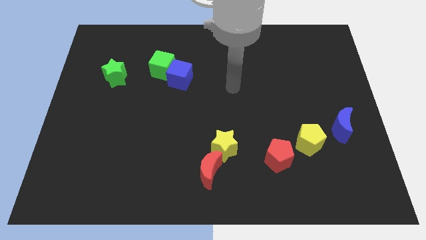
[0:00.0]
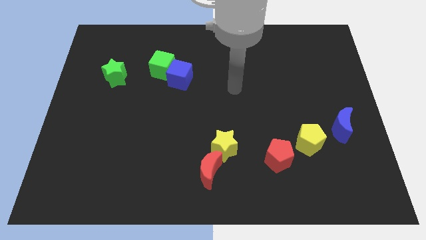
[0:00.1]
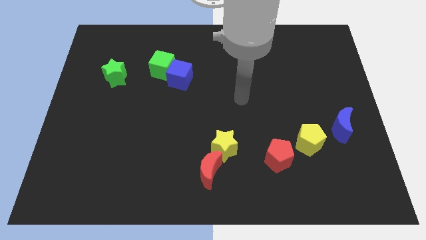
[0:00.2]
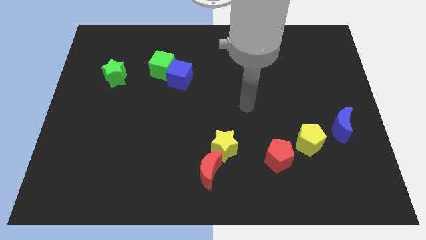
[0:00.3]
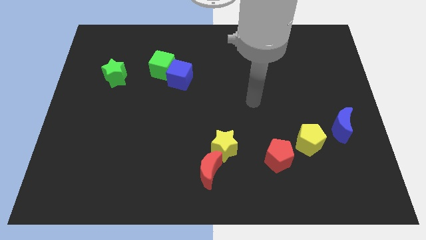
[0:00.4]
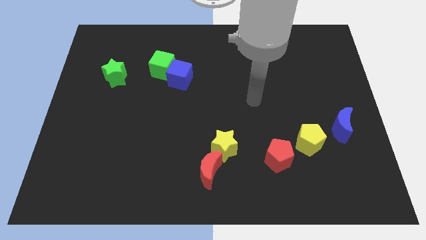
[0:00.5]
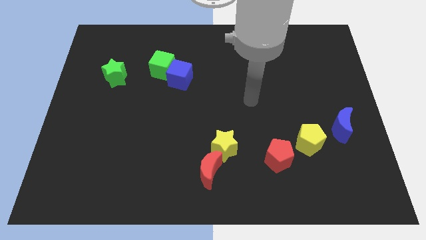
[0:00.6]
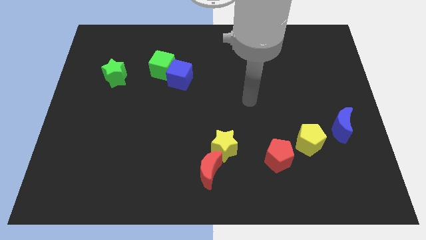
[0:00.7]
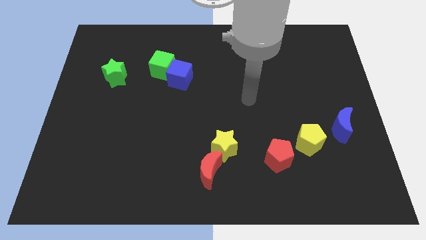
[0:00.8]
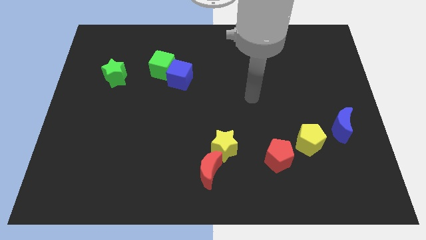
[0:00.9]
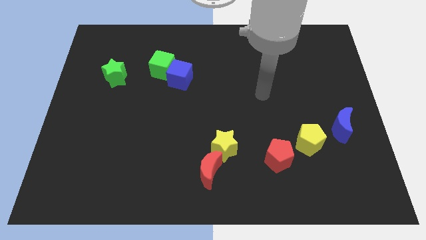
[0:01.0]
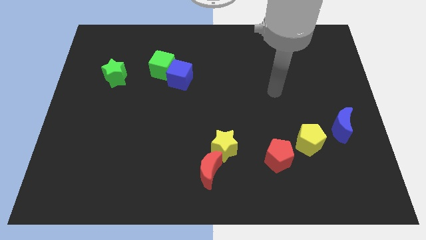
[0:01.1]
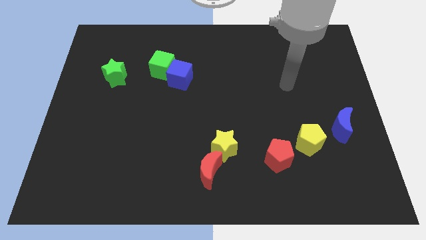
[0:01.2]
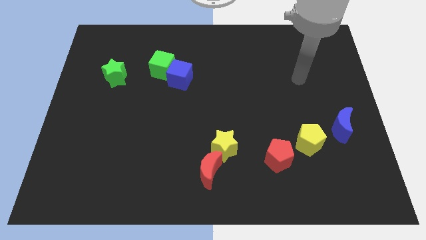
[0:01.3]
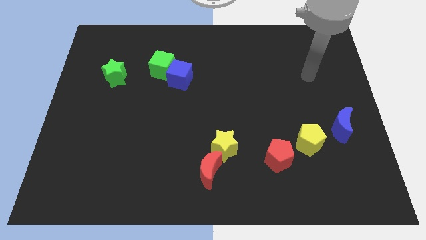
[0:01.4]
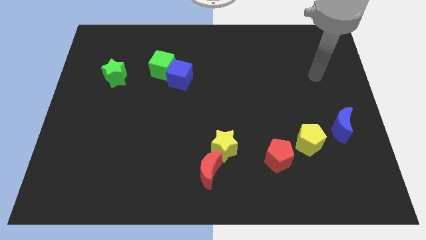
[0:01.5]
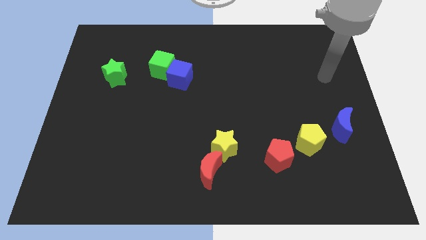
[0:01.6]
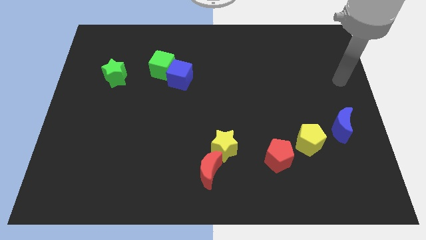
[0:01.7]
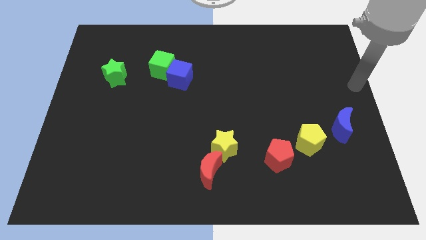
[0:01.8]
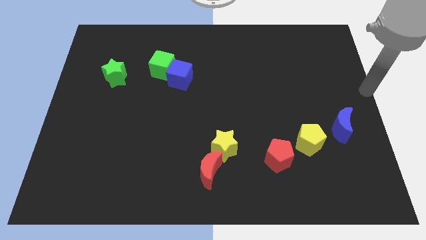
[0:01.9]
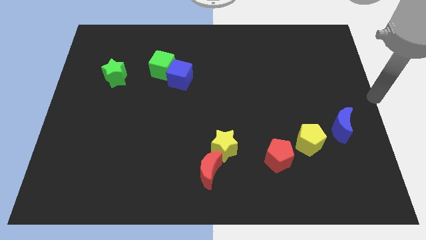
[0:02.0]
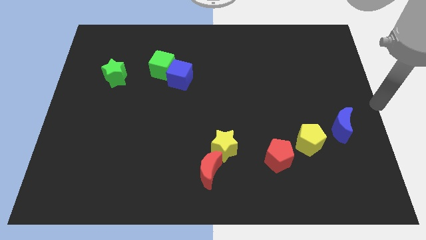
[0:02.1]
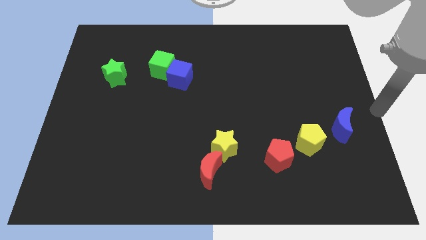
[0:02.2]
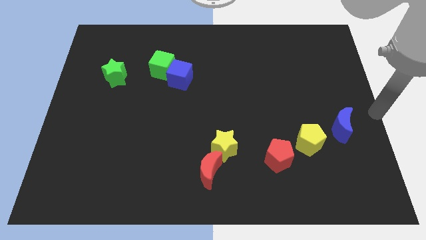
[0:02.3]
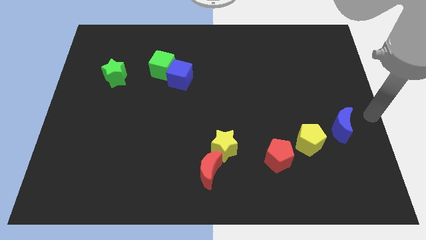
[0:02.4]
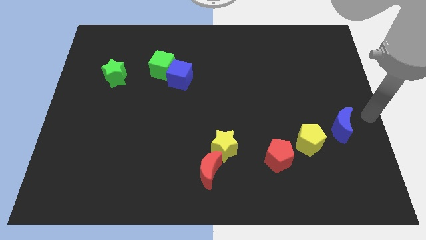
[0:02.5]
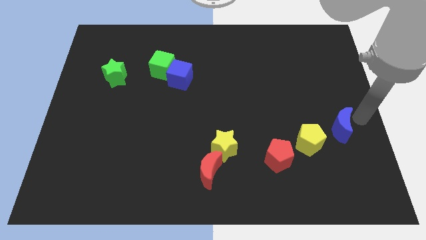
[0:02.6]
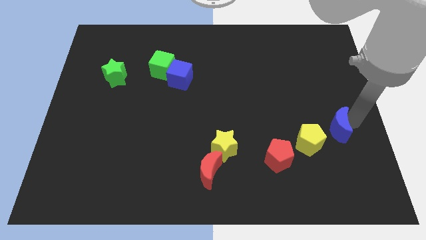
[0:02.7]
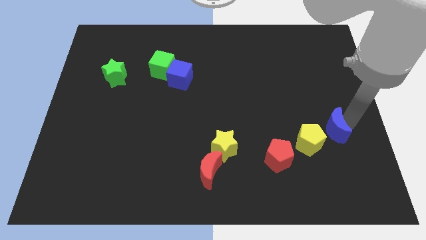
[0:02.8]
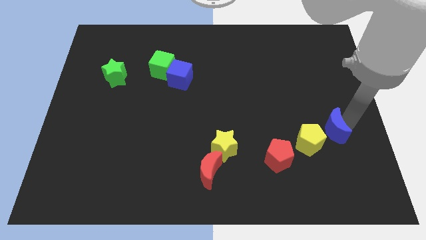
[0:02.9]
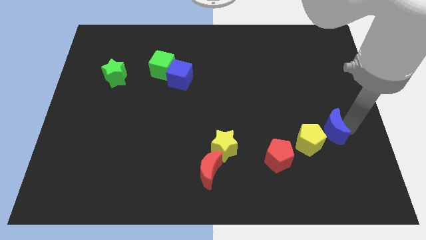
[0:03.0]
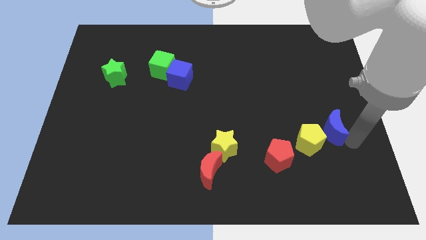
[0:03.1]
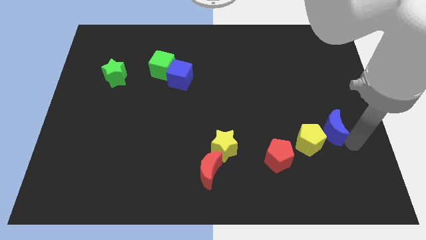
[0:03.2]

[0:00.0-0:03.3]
move arm near blue moon

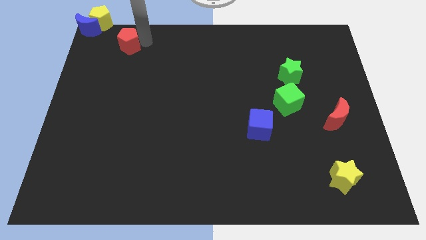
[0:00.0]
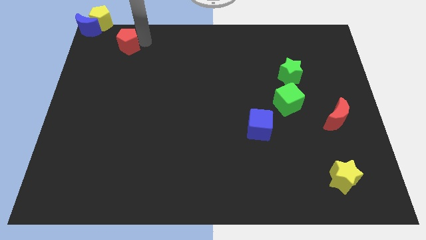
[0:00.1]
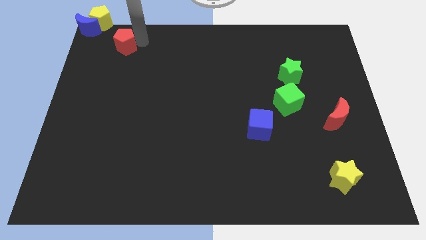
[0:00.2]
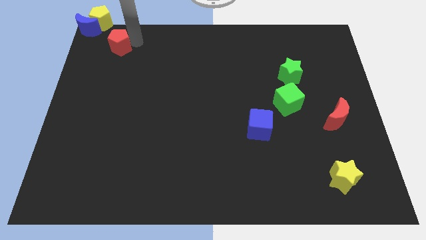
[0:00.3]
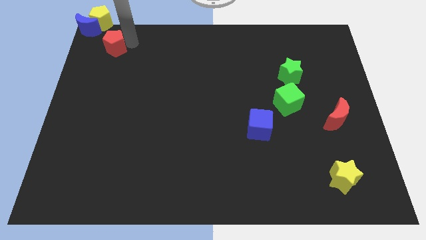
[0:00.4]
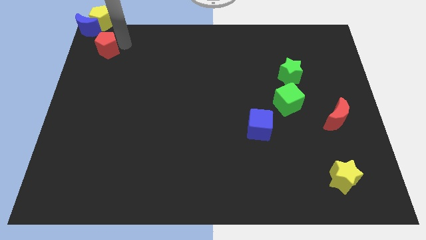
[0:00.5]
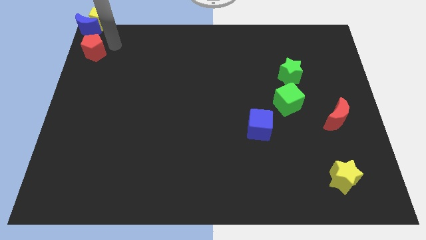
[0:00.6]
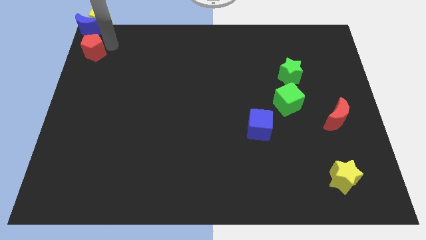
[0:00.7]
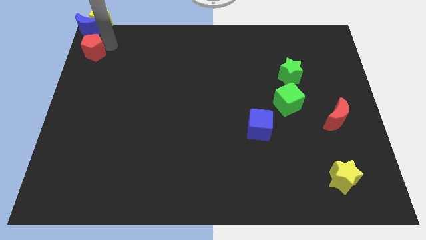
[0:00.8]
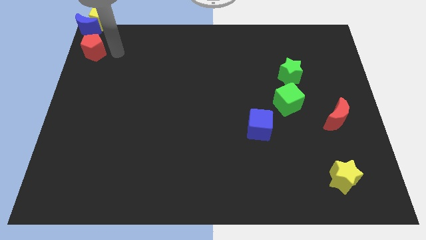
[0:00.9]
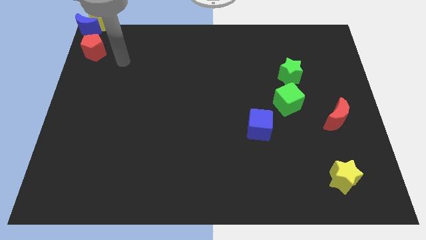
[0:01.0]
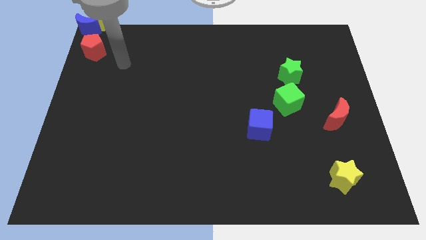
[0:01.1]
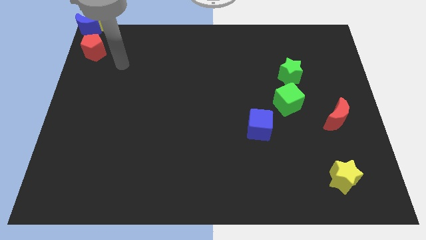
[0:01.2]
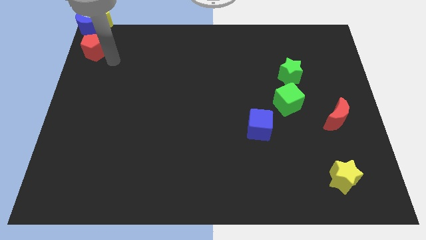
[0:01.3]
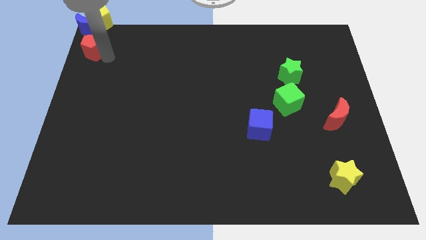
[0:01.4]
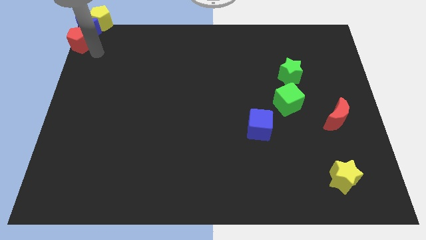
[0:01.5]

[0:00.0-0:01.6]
place the red pentagon close to the blue crescent

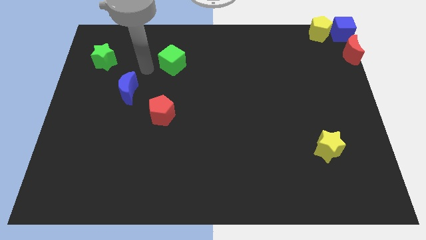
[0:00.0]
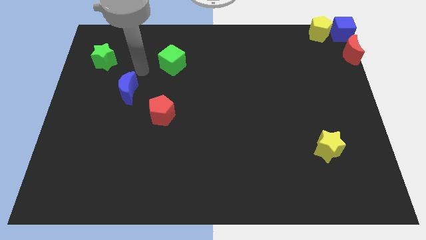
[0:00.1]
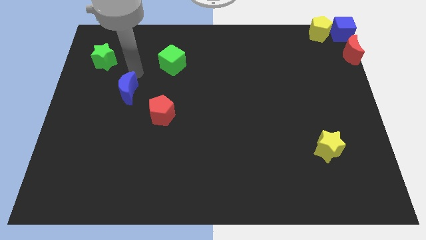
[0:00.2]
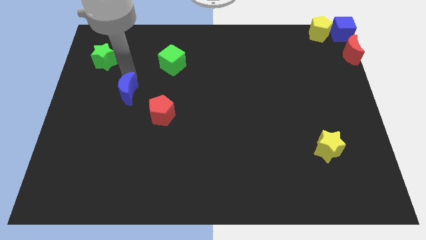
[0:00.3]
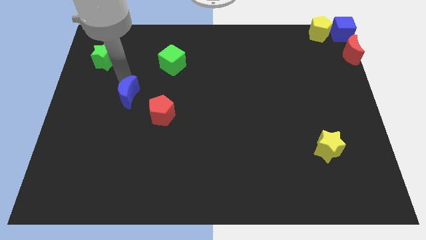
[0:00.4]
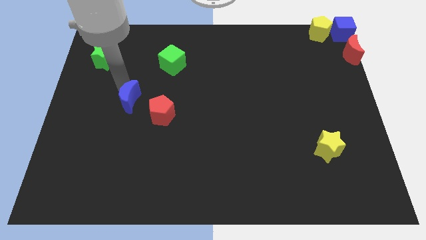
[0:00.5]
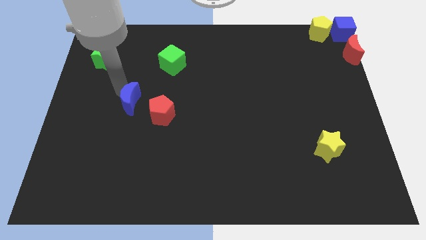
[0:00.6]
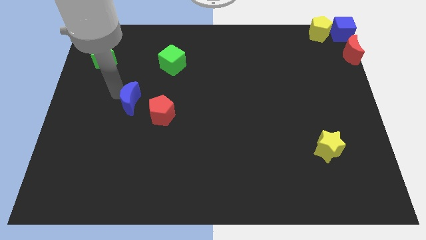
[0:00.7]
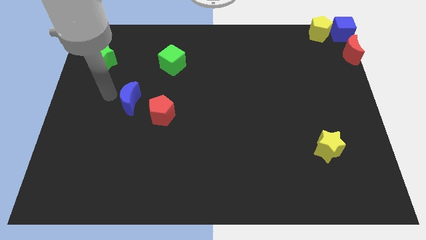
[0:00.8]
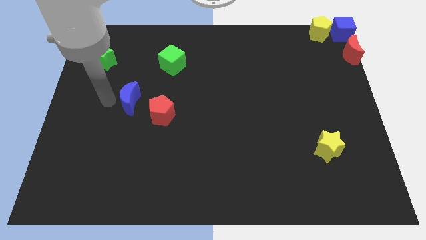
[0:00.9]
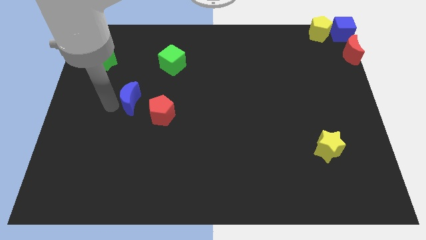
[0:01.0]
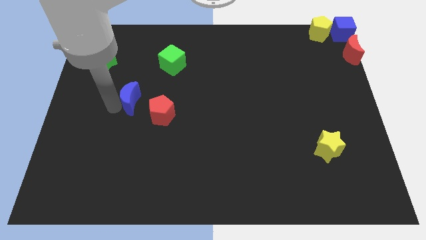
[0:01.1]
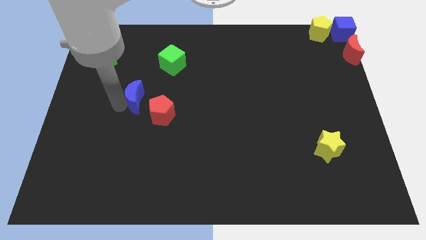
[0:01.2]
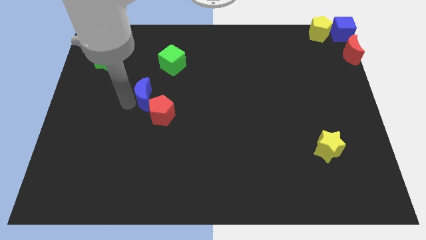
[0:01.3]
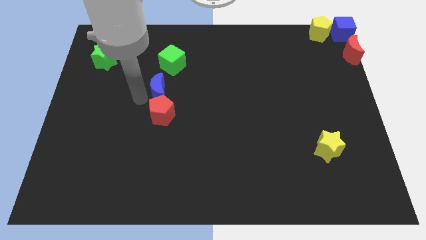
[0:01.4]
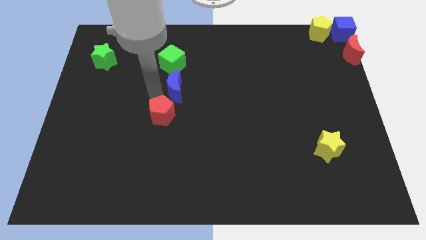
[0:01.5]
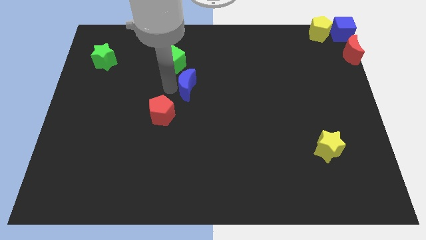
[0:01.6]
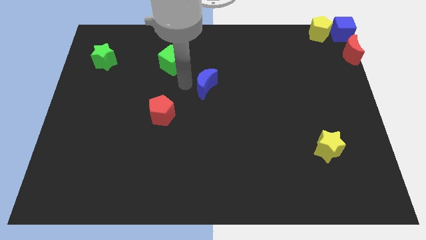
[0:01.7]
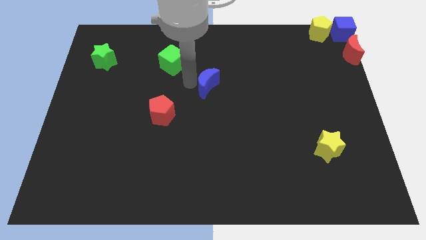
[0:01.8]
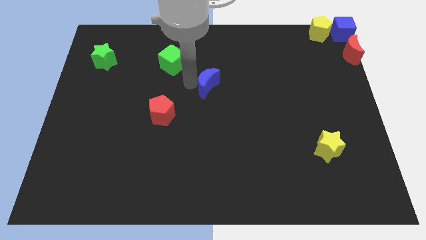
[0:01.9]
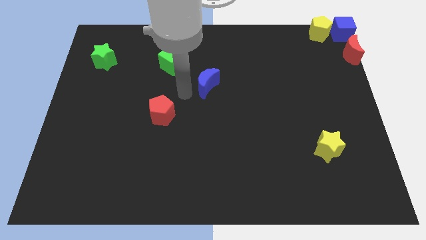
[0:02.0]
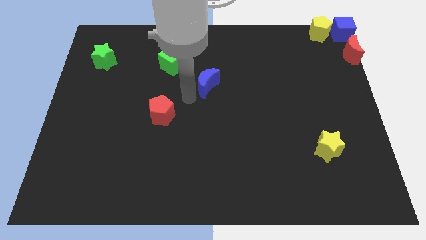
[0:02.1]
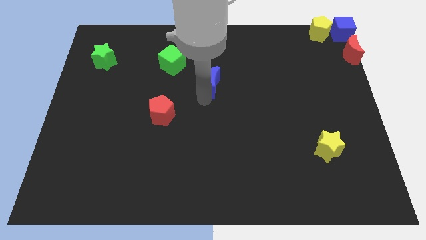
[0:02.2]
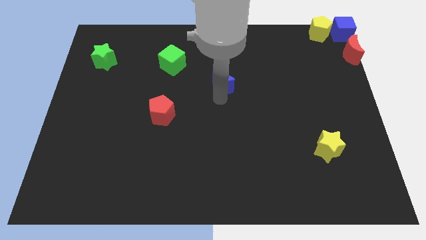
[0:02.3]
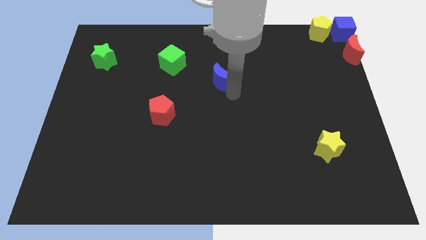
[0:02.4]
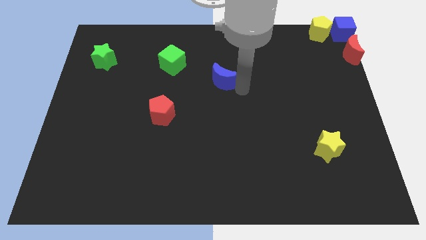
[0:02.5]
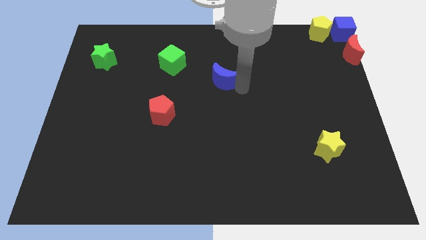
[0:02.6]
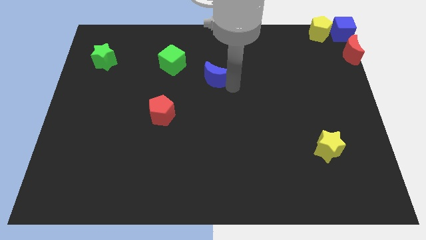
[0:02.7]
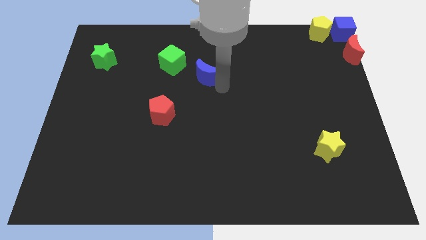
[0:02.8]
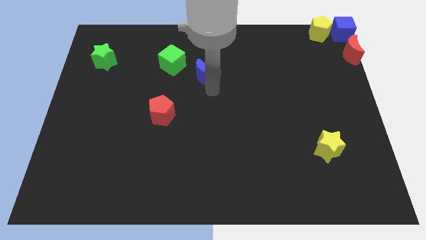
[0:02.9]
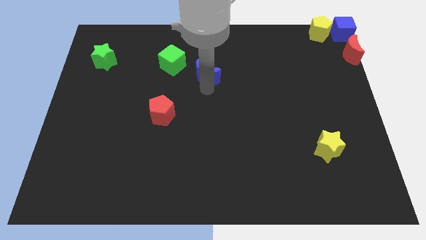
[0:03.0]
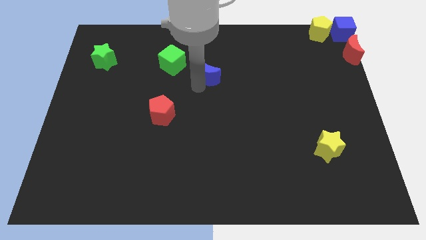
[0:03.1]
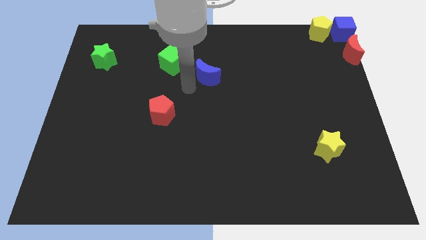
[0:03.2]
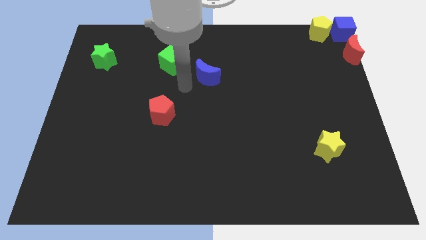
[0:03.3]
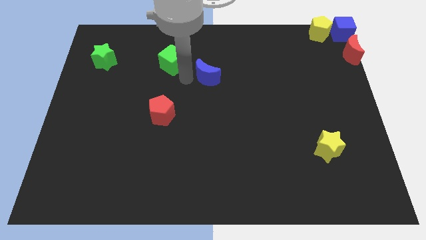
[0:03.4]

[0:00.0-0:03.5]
move the blue moon to the right side of the green cube

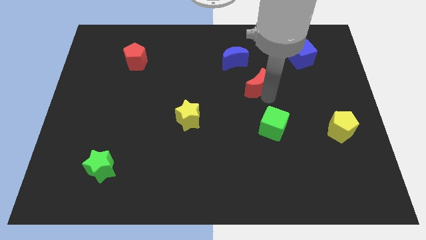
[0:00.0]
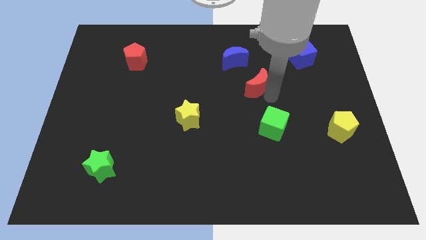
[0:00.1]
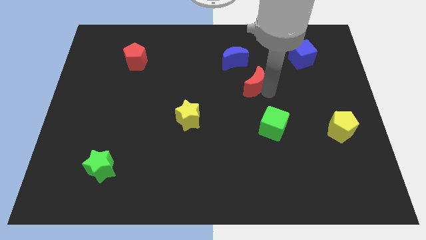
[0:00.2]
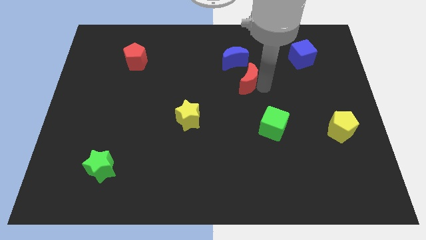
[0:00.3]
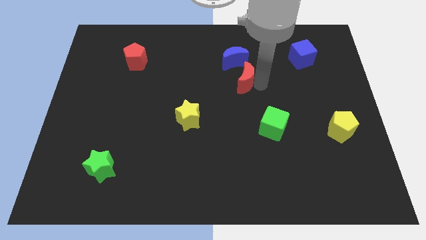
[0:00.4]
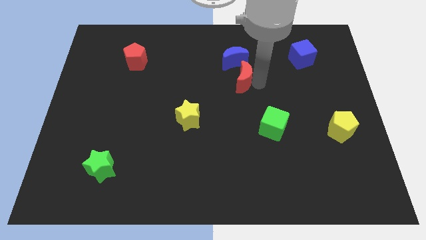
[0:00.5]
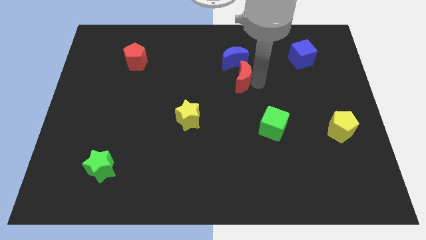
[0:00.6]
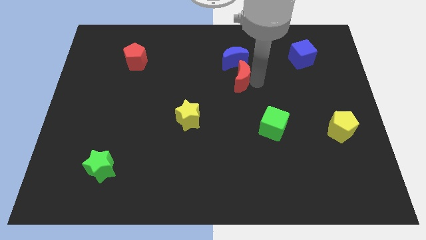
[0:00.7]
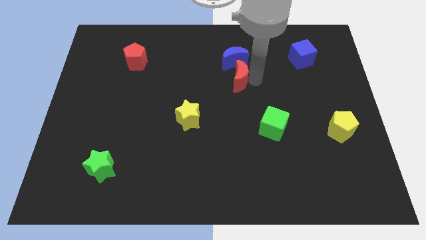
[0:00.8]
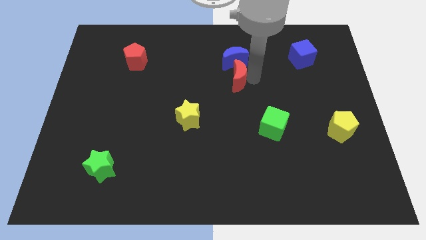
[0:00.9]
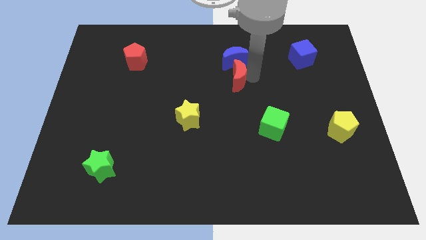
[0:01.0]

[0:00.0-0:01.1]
put the red crescent at the bottom of the blue crescent
